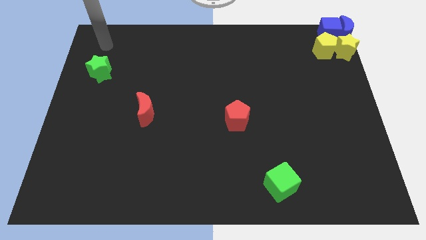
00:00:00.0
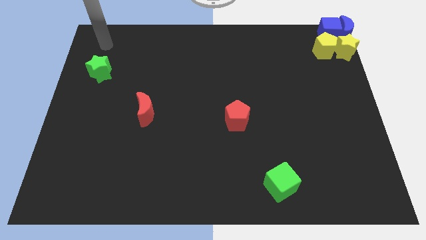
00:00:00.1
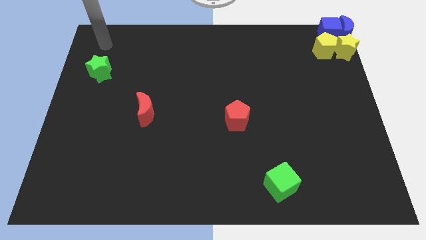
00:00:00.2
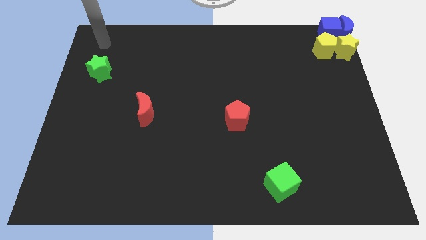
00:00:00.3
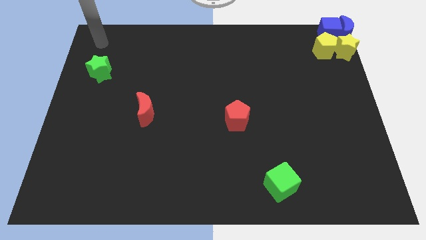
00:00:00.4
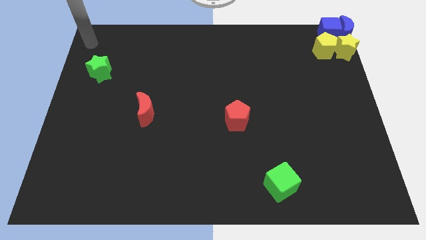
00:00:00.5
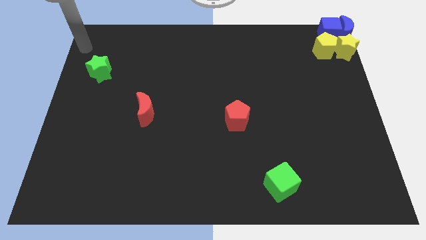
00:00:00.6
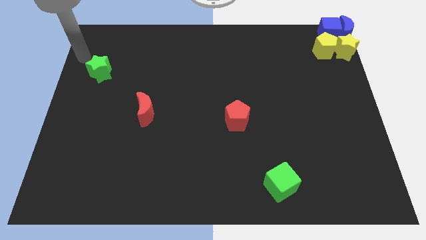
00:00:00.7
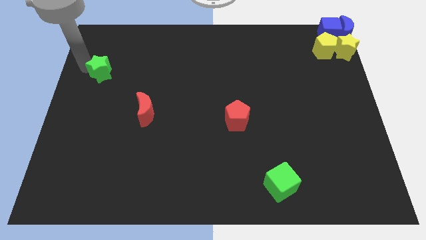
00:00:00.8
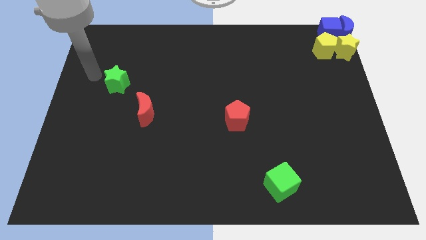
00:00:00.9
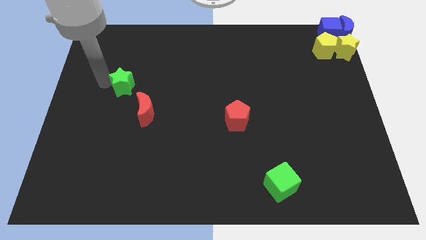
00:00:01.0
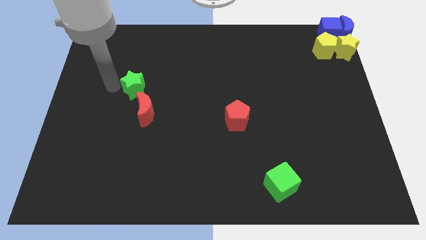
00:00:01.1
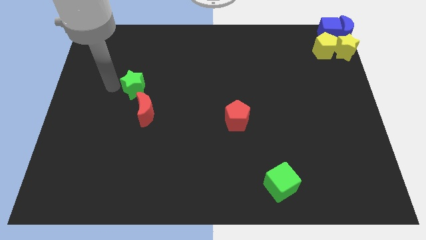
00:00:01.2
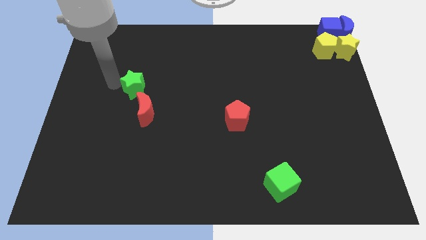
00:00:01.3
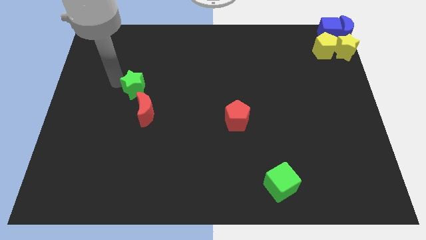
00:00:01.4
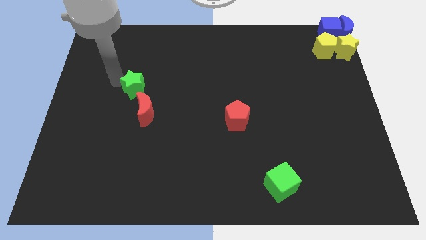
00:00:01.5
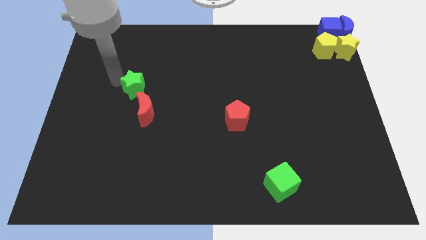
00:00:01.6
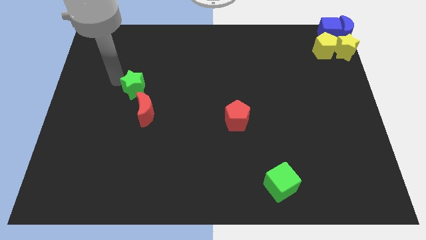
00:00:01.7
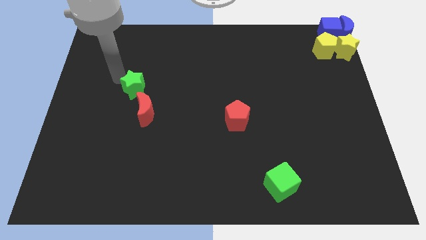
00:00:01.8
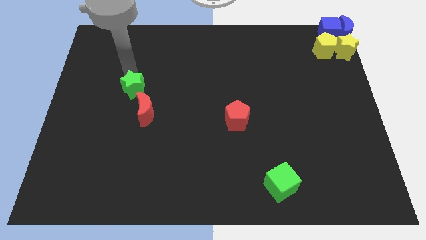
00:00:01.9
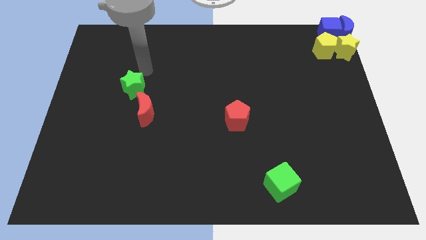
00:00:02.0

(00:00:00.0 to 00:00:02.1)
slide green star close to red moon

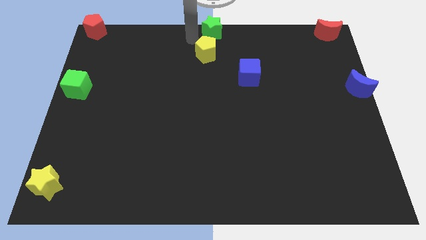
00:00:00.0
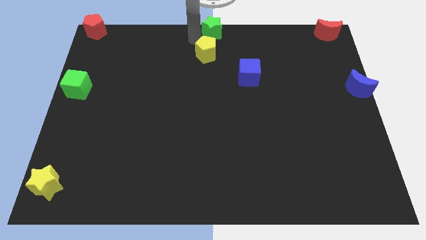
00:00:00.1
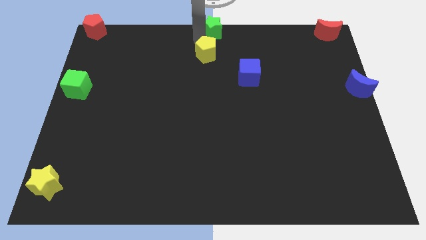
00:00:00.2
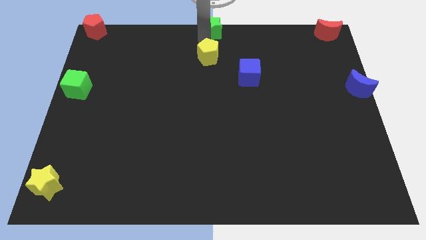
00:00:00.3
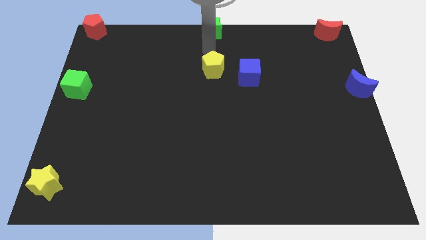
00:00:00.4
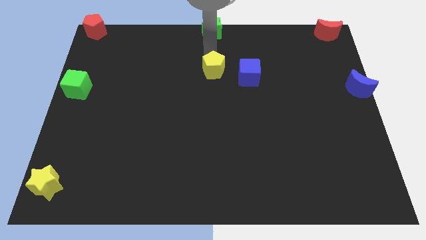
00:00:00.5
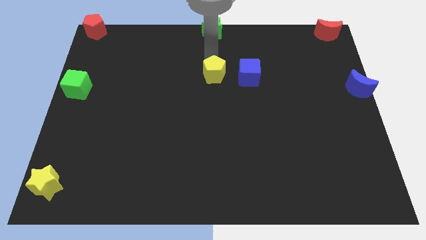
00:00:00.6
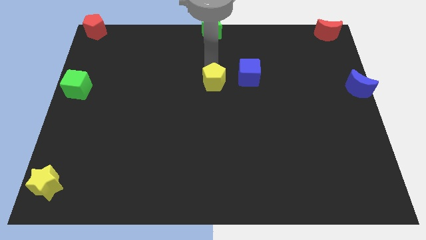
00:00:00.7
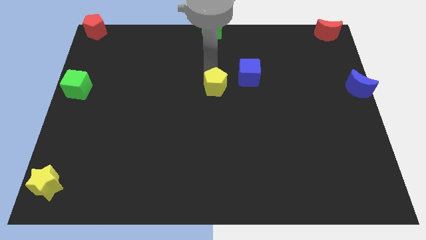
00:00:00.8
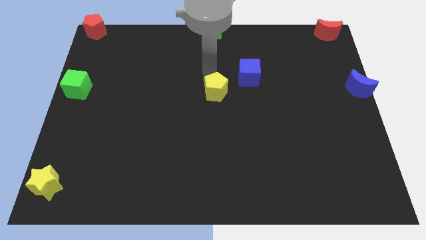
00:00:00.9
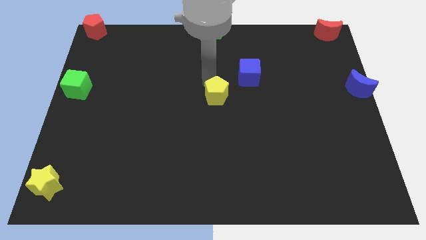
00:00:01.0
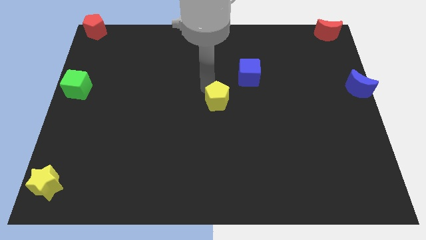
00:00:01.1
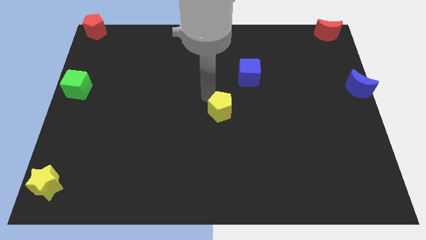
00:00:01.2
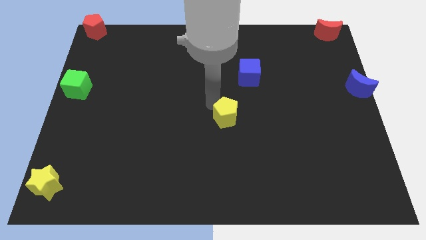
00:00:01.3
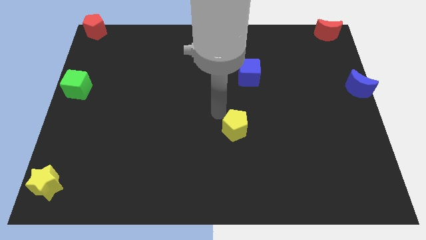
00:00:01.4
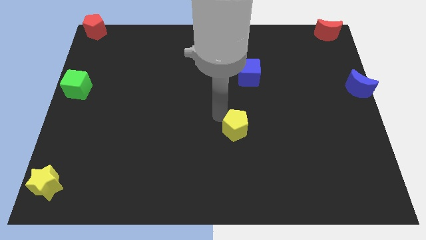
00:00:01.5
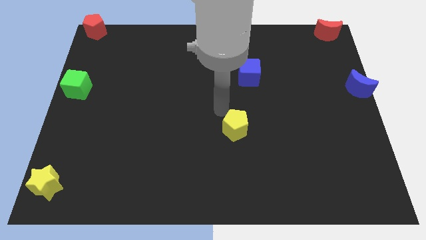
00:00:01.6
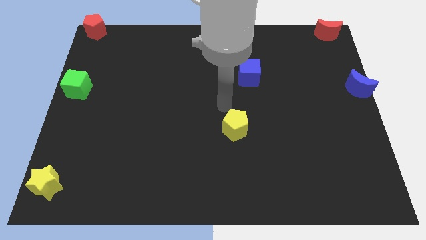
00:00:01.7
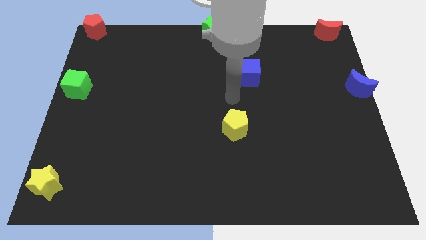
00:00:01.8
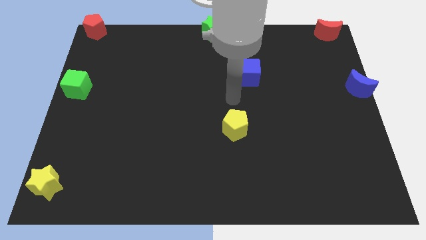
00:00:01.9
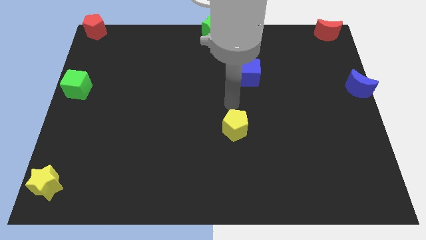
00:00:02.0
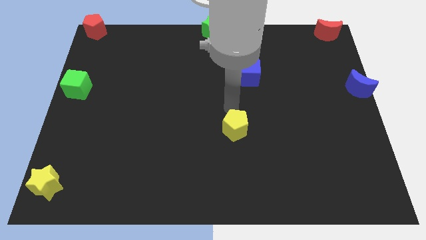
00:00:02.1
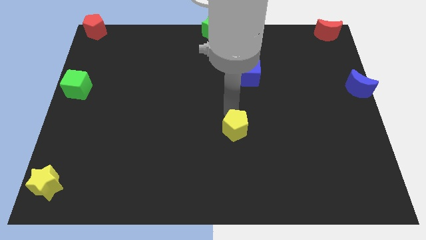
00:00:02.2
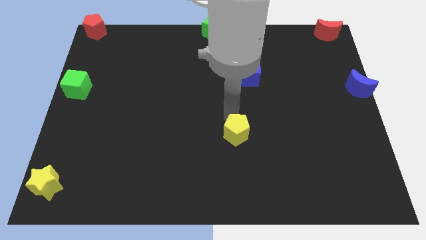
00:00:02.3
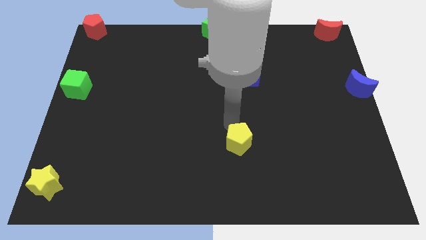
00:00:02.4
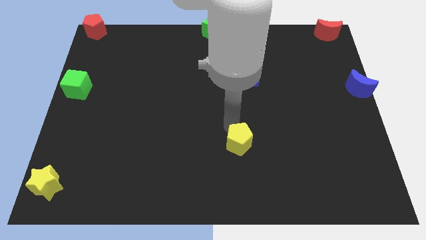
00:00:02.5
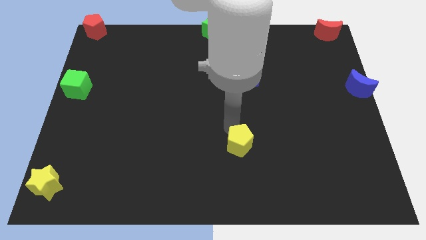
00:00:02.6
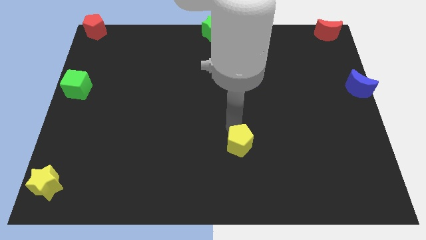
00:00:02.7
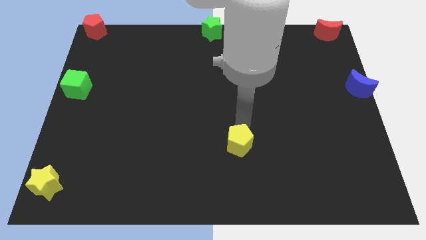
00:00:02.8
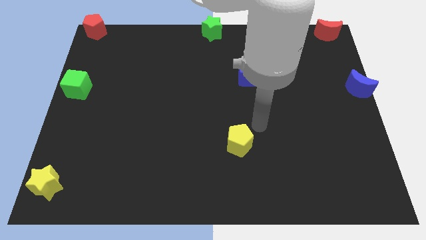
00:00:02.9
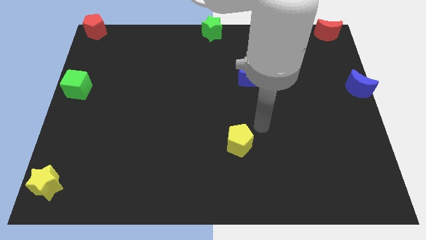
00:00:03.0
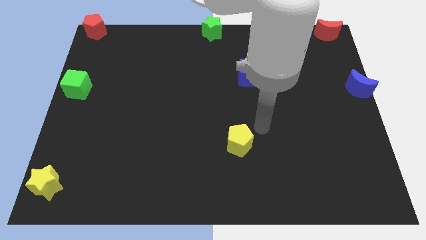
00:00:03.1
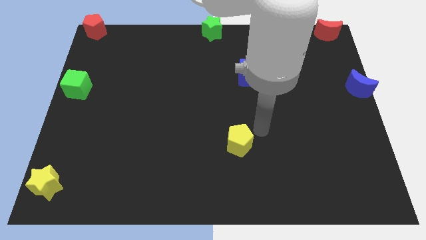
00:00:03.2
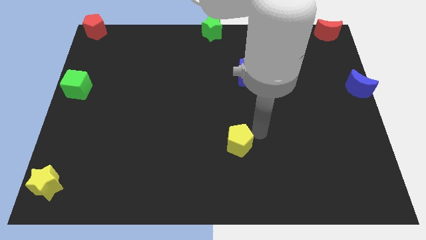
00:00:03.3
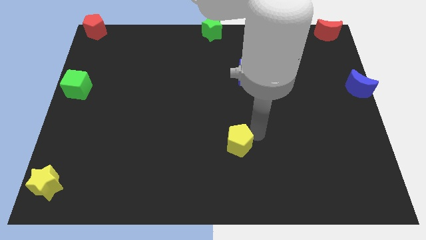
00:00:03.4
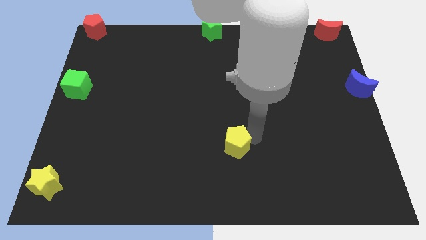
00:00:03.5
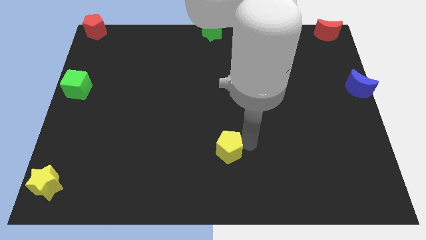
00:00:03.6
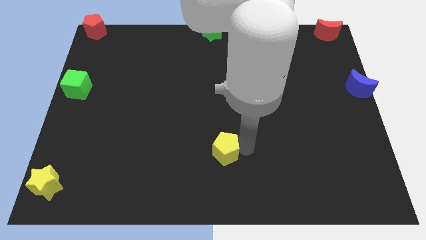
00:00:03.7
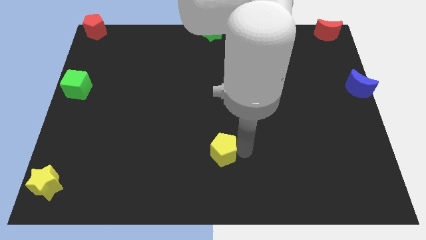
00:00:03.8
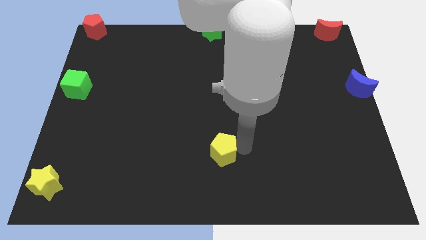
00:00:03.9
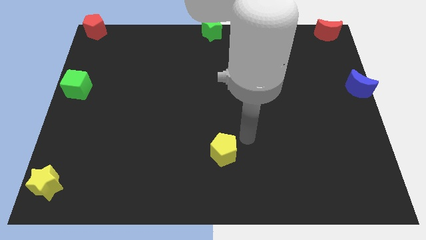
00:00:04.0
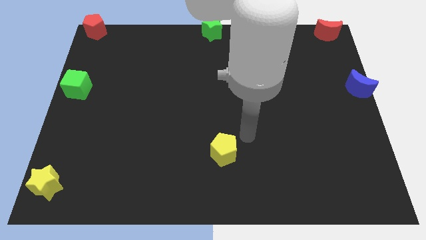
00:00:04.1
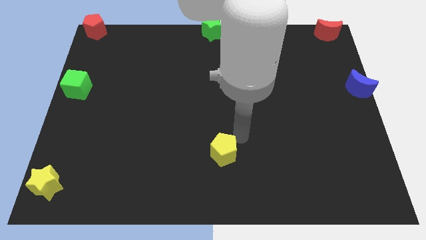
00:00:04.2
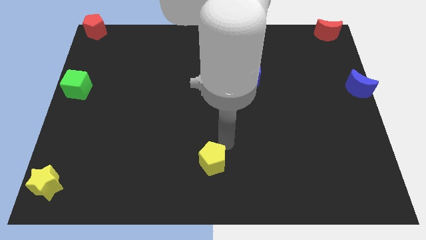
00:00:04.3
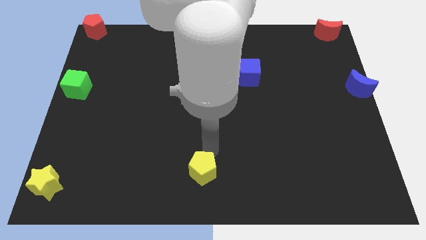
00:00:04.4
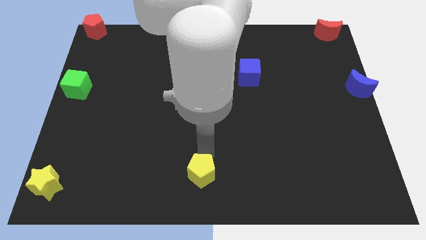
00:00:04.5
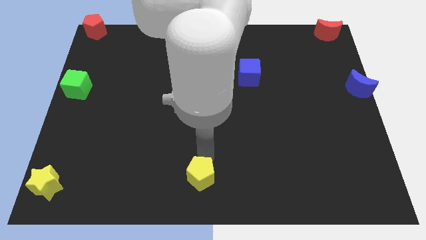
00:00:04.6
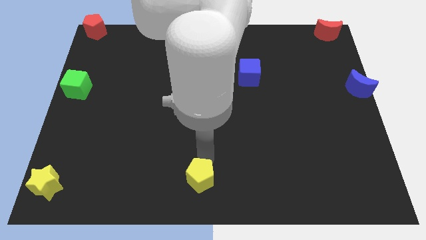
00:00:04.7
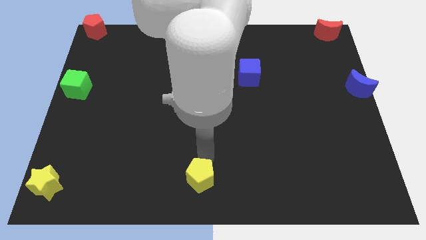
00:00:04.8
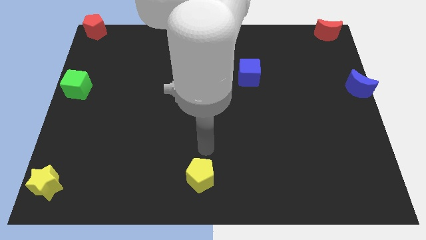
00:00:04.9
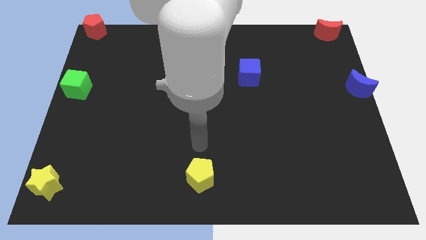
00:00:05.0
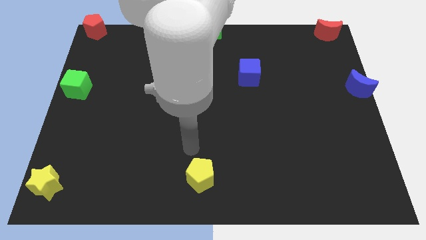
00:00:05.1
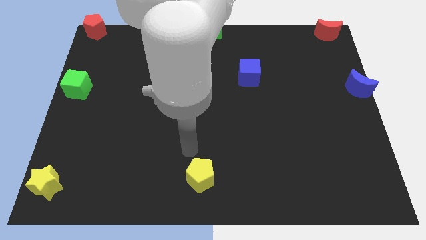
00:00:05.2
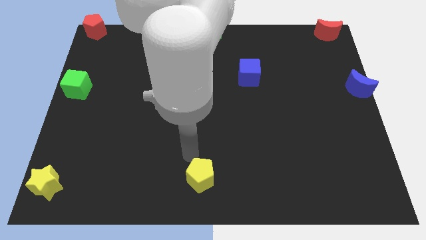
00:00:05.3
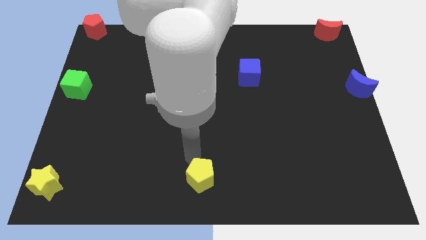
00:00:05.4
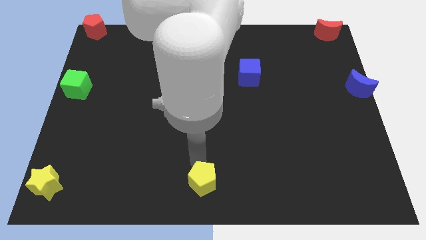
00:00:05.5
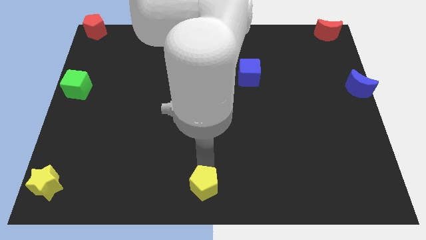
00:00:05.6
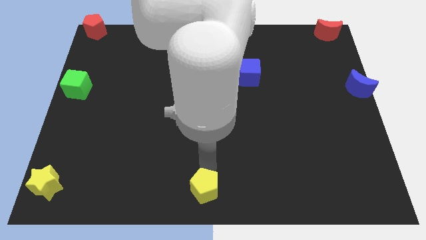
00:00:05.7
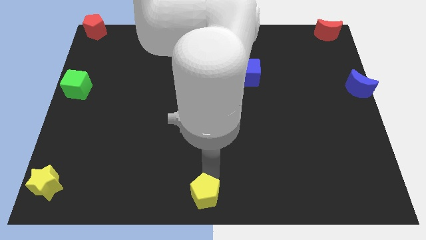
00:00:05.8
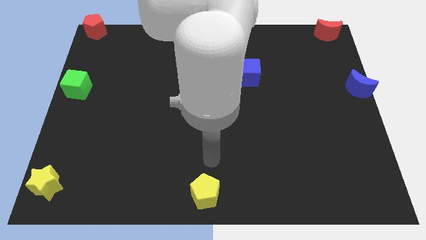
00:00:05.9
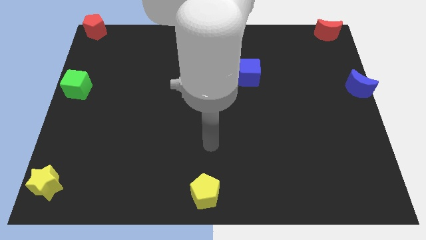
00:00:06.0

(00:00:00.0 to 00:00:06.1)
push the yellow pentagon to the bottom center

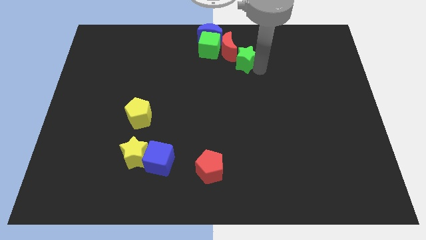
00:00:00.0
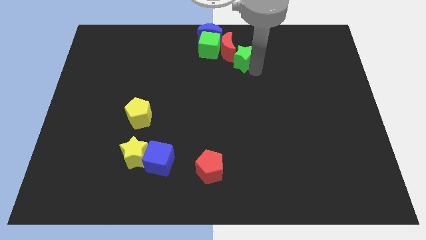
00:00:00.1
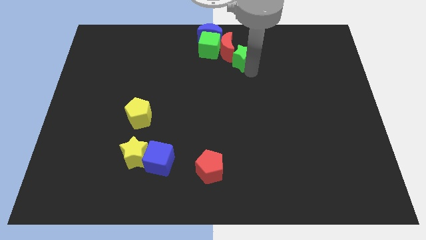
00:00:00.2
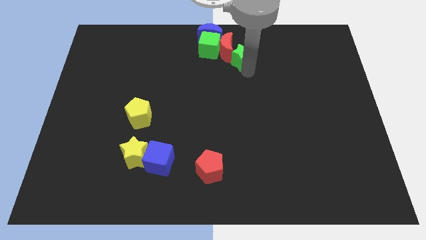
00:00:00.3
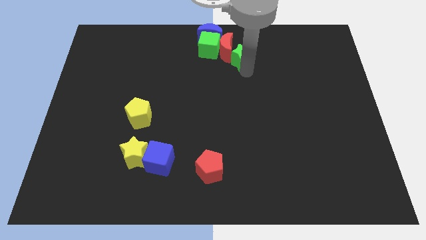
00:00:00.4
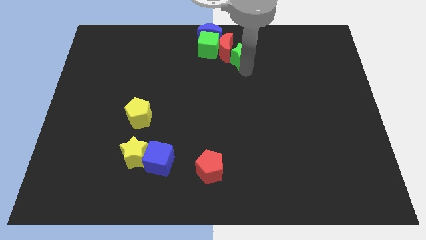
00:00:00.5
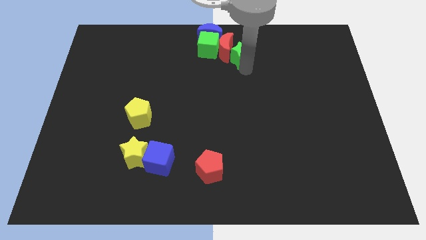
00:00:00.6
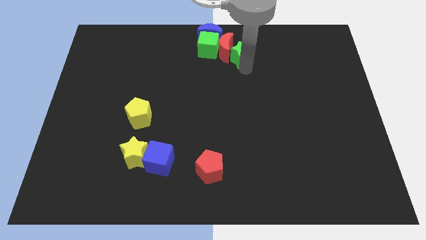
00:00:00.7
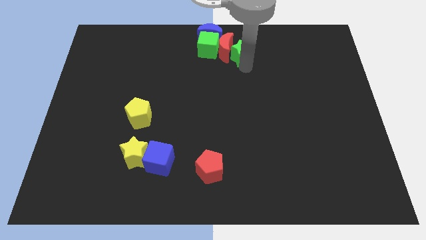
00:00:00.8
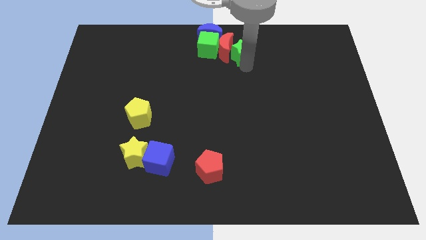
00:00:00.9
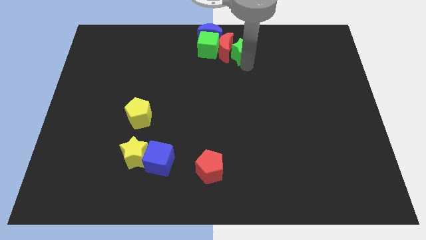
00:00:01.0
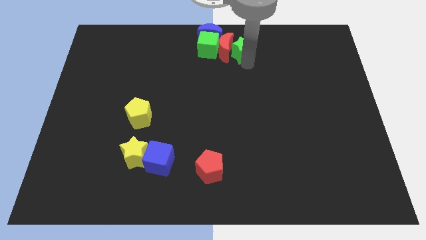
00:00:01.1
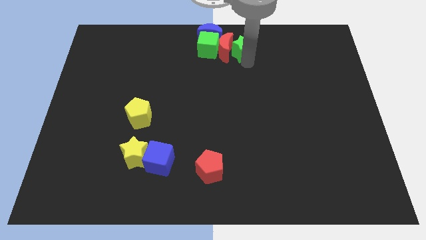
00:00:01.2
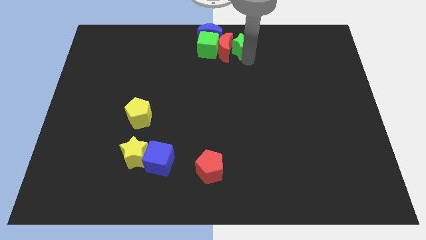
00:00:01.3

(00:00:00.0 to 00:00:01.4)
push the green star to the right of the red crescent
